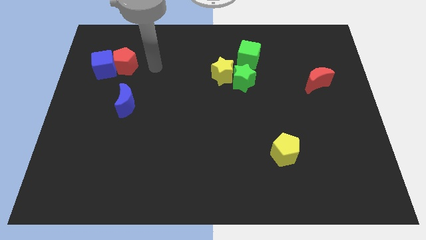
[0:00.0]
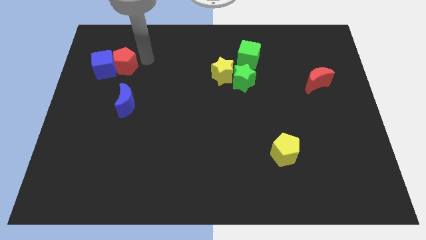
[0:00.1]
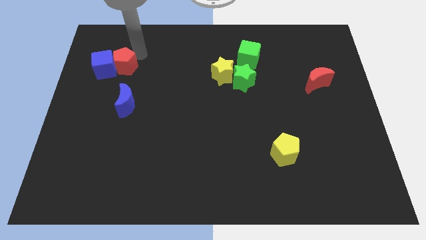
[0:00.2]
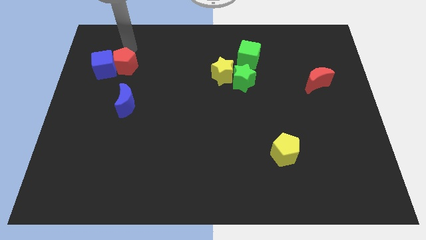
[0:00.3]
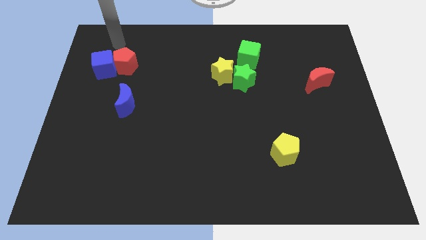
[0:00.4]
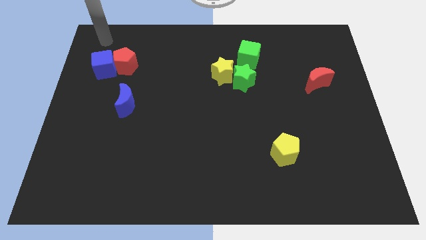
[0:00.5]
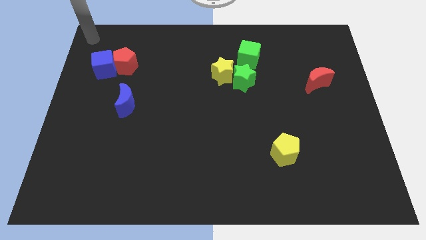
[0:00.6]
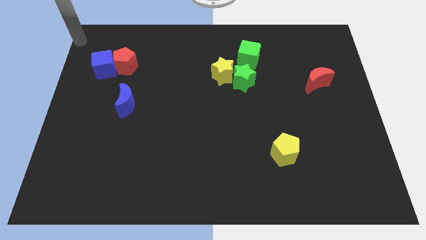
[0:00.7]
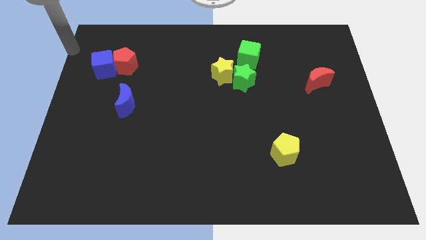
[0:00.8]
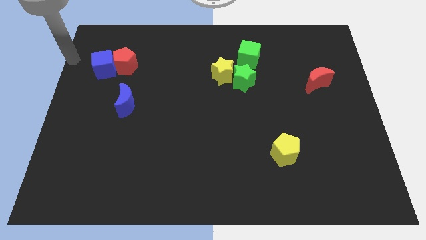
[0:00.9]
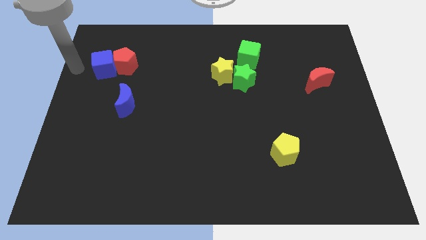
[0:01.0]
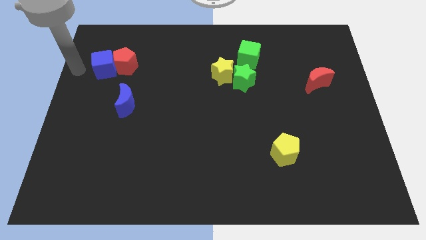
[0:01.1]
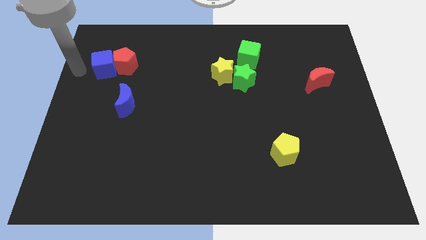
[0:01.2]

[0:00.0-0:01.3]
put your hand at the left of the blue cube

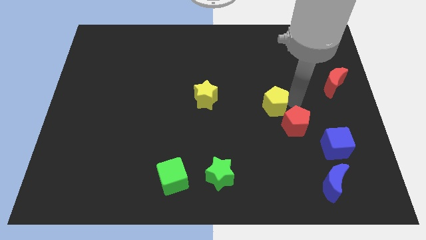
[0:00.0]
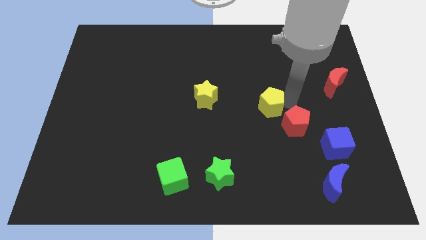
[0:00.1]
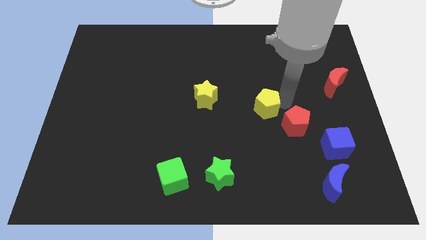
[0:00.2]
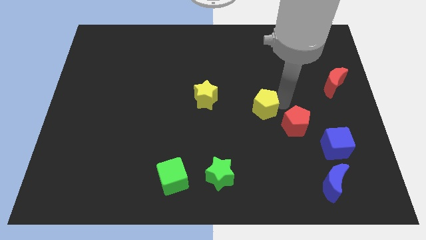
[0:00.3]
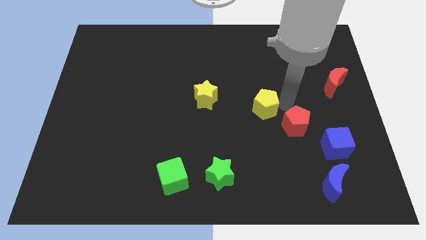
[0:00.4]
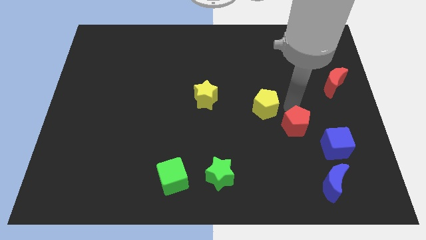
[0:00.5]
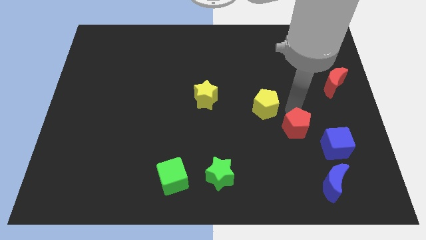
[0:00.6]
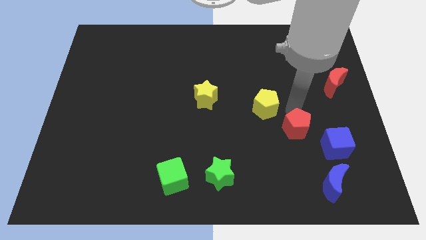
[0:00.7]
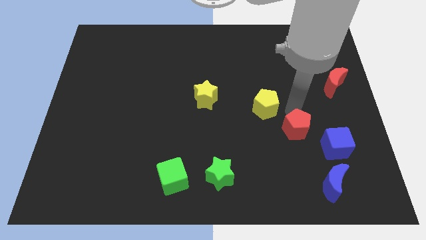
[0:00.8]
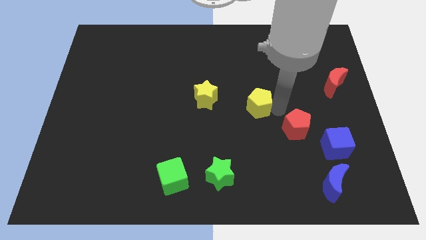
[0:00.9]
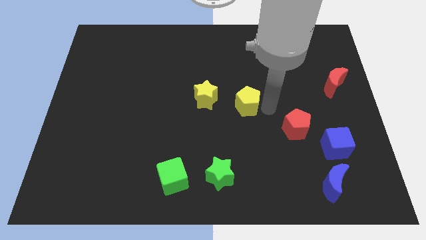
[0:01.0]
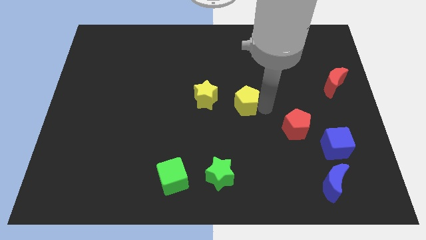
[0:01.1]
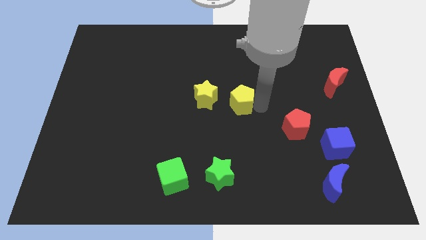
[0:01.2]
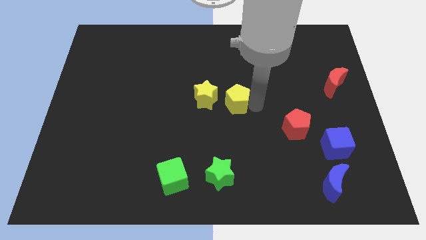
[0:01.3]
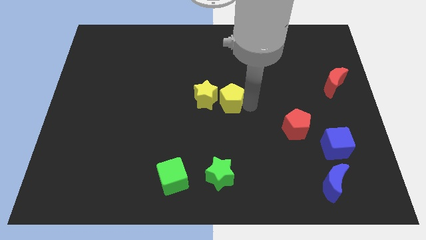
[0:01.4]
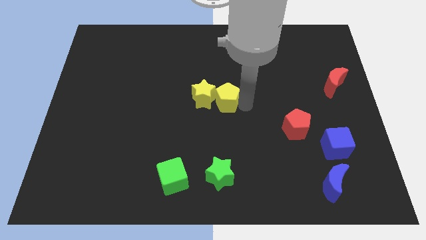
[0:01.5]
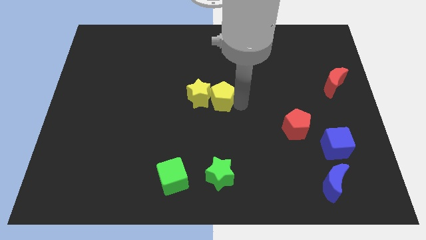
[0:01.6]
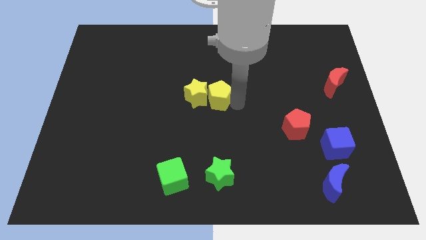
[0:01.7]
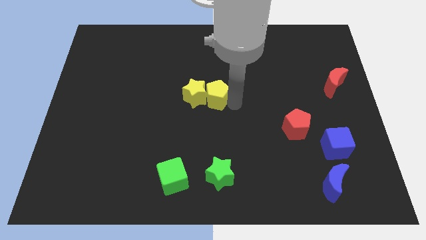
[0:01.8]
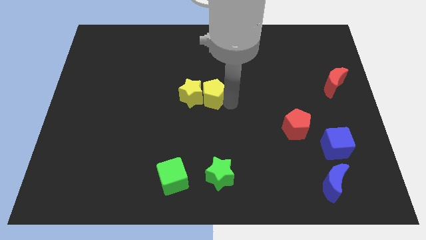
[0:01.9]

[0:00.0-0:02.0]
separate the yellow pentagon from the red pentagon

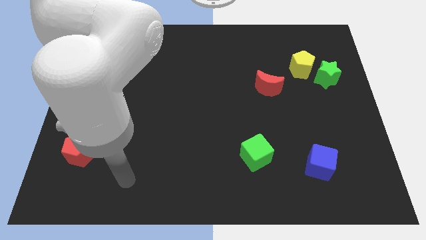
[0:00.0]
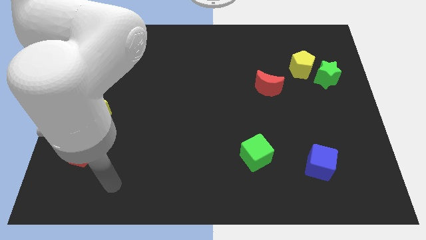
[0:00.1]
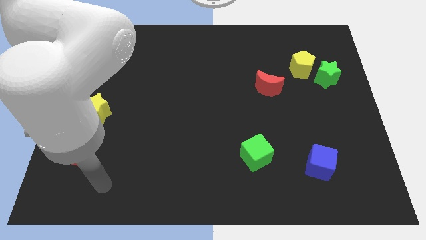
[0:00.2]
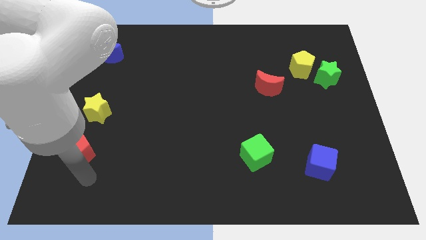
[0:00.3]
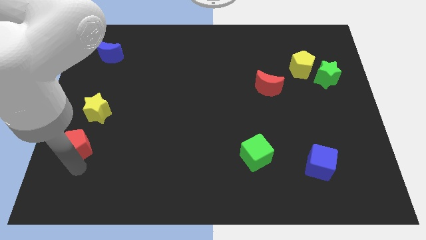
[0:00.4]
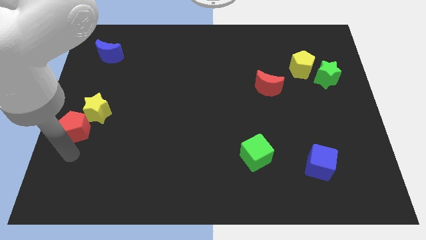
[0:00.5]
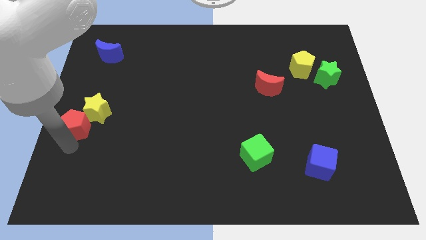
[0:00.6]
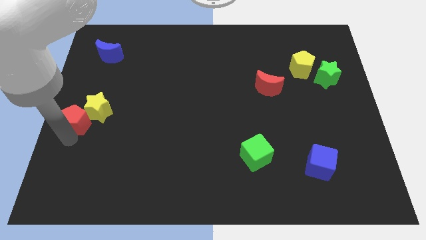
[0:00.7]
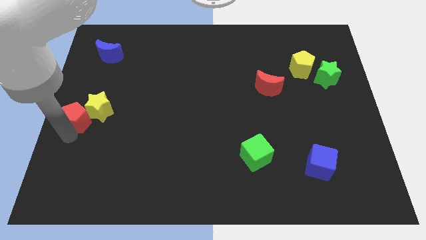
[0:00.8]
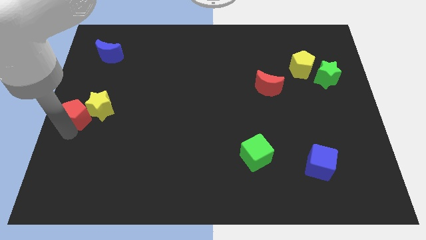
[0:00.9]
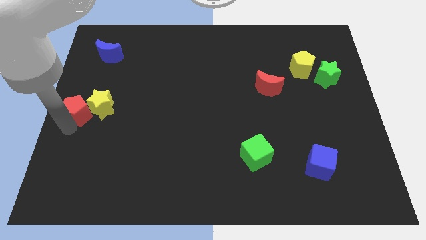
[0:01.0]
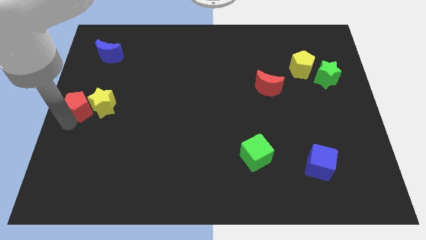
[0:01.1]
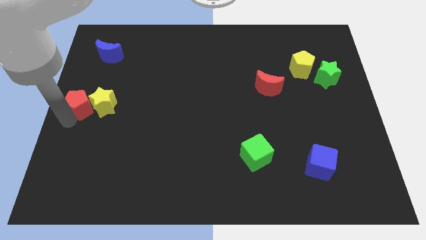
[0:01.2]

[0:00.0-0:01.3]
push the red pentagon into the yellow star

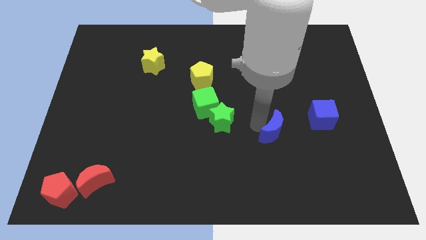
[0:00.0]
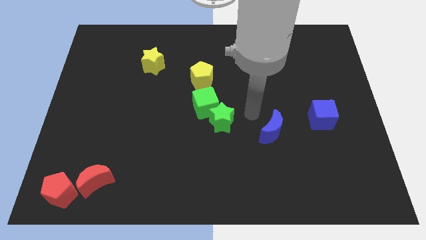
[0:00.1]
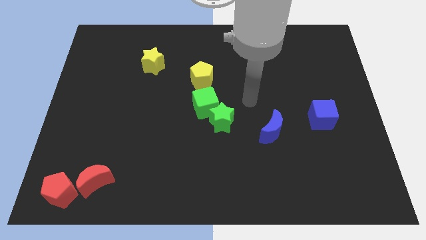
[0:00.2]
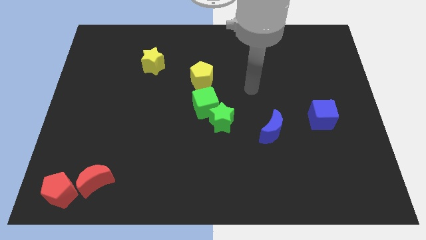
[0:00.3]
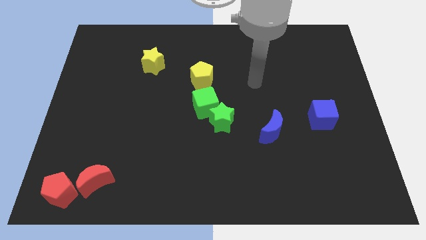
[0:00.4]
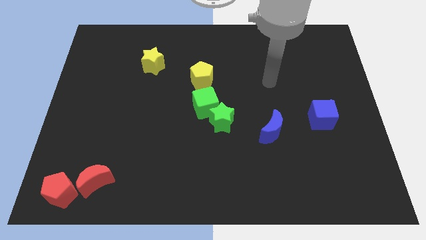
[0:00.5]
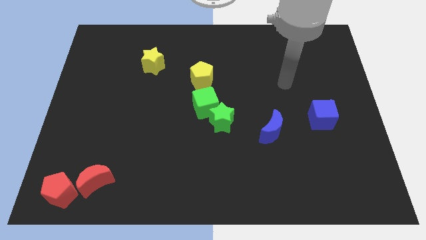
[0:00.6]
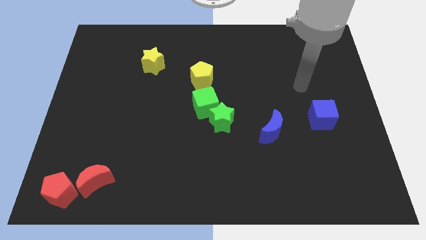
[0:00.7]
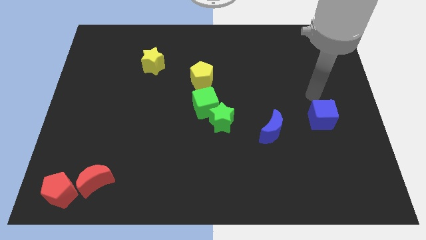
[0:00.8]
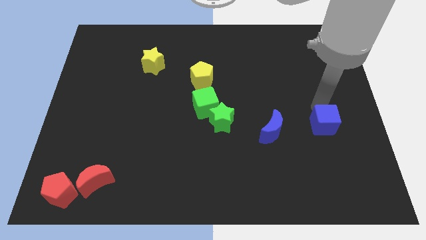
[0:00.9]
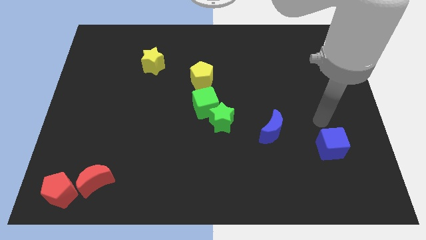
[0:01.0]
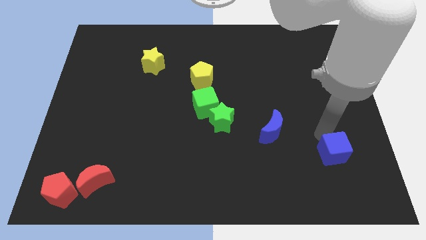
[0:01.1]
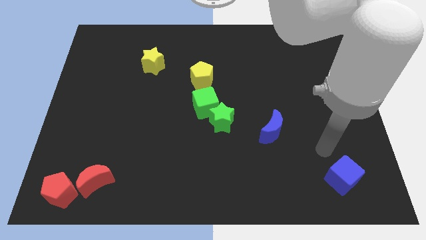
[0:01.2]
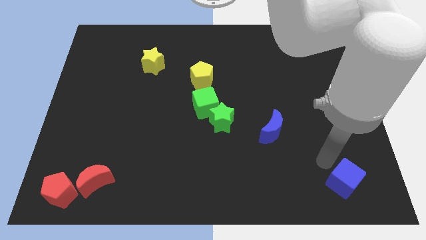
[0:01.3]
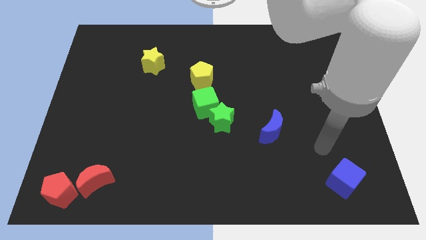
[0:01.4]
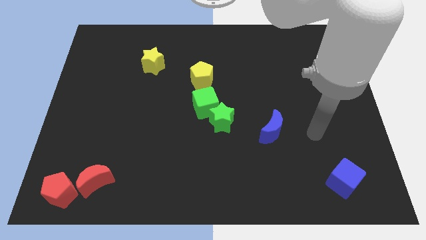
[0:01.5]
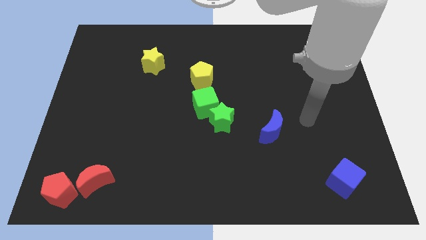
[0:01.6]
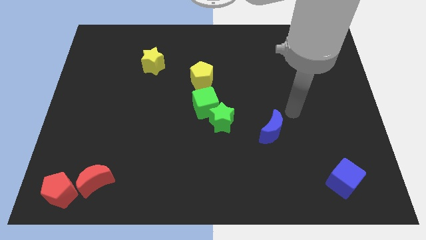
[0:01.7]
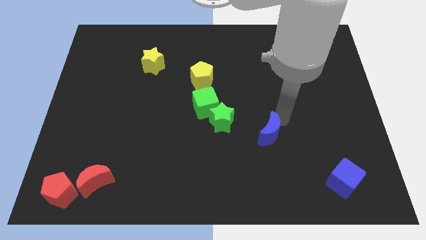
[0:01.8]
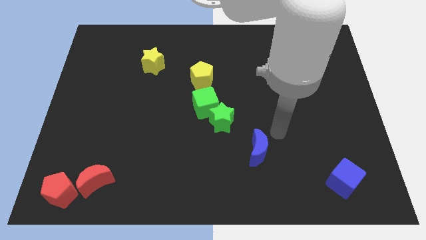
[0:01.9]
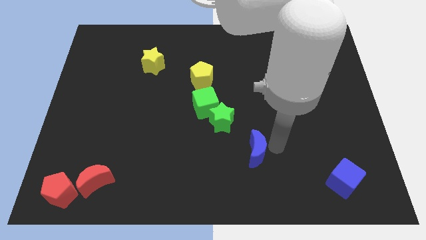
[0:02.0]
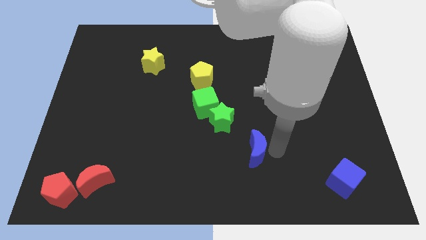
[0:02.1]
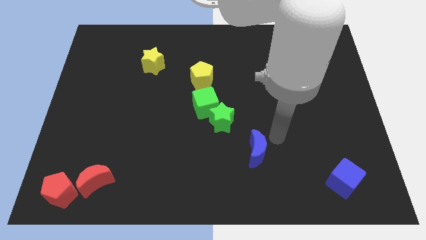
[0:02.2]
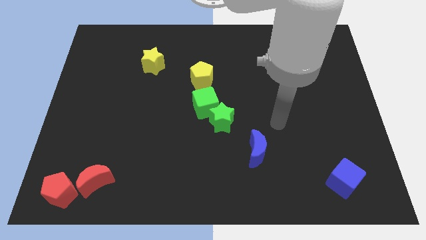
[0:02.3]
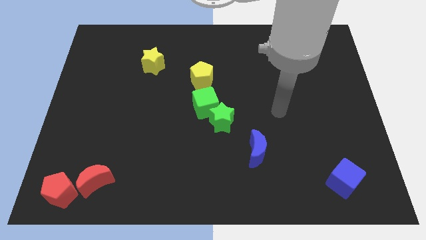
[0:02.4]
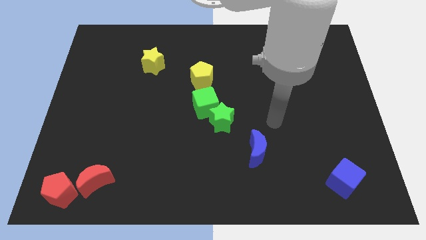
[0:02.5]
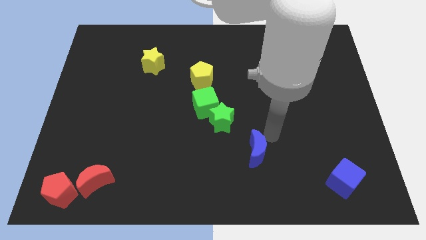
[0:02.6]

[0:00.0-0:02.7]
push the blue cube and blue moon towards the bottom side of the board

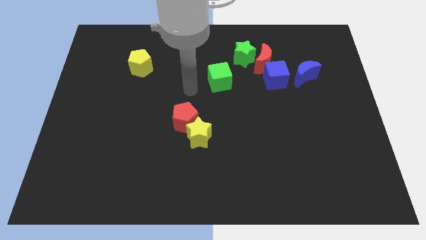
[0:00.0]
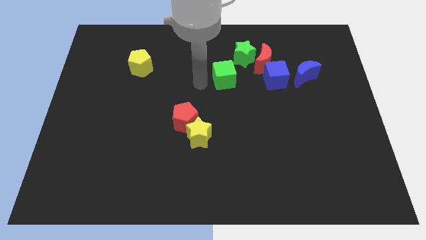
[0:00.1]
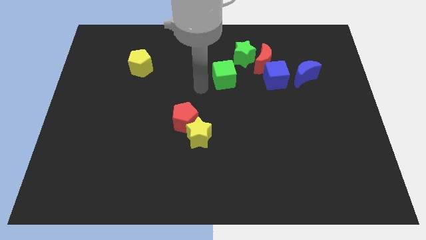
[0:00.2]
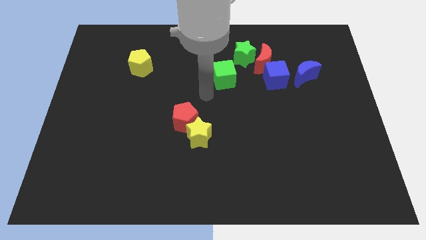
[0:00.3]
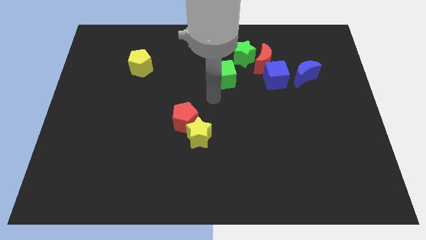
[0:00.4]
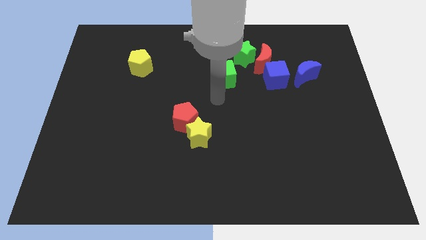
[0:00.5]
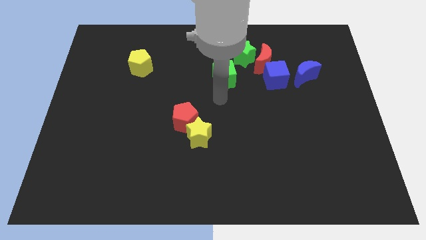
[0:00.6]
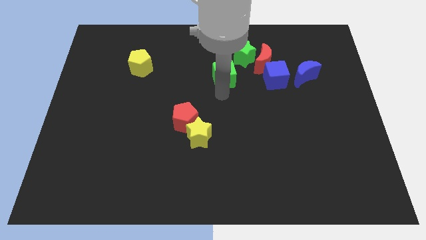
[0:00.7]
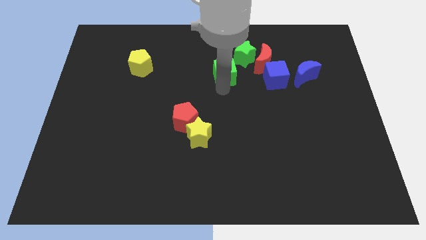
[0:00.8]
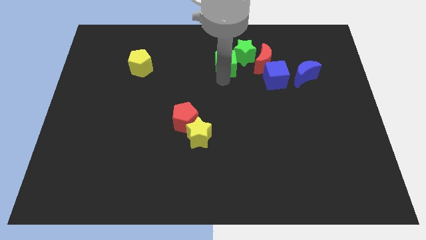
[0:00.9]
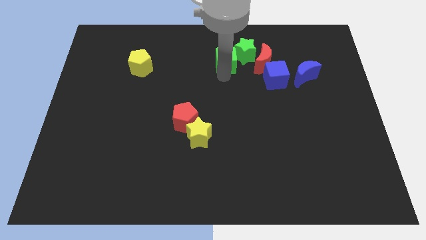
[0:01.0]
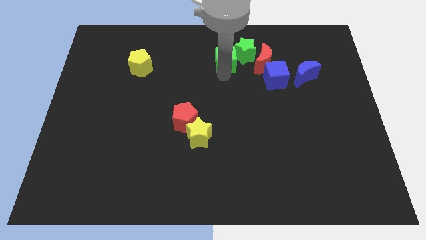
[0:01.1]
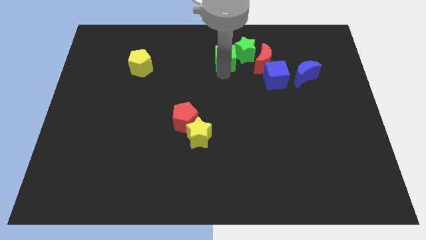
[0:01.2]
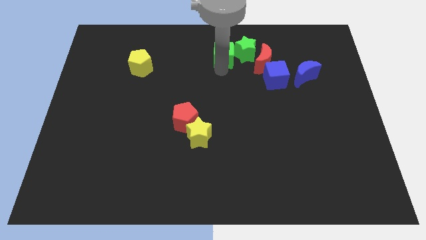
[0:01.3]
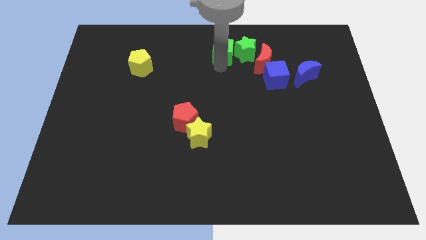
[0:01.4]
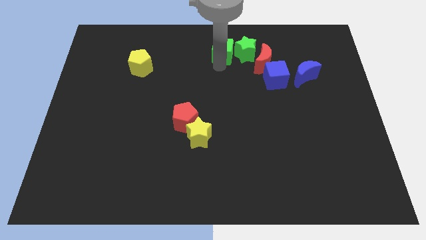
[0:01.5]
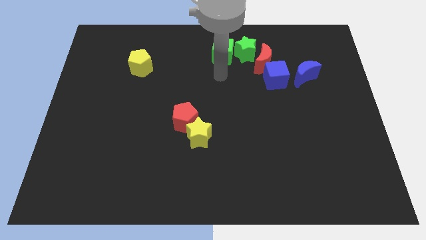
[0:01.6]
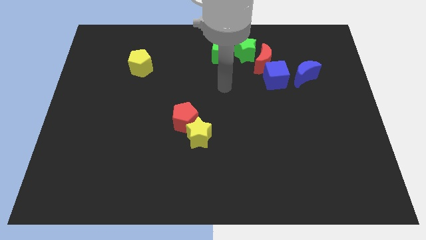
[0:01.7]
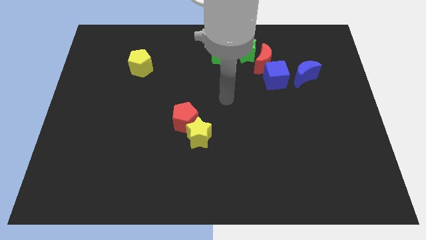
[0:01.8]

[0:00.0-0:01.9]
put the green cube left to the green star
